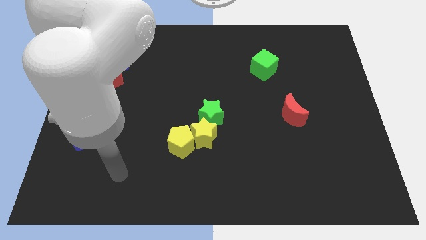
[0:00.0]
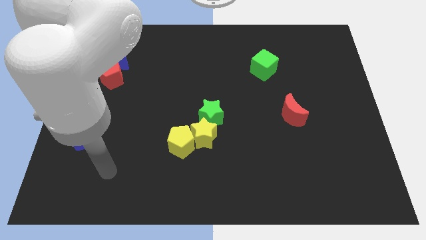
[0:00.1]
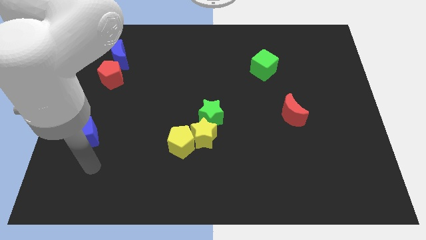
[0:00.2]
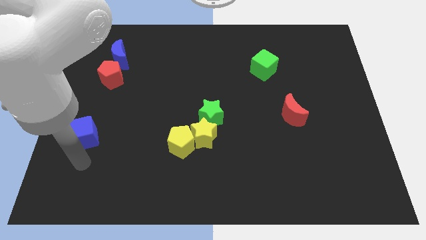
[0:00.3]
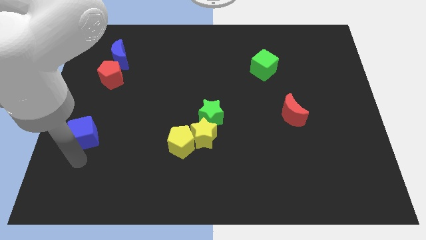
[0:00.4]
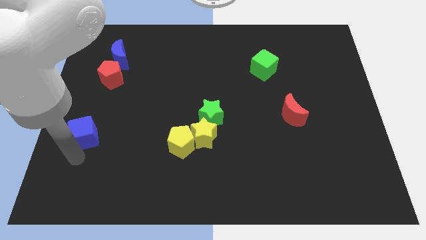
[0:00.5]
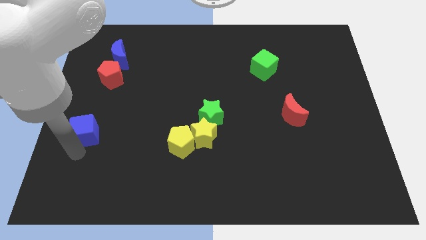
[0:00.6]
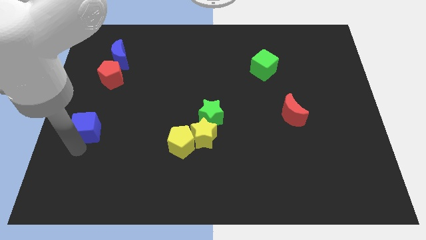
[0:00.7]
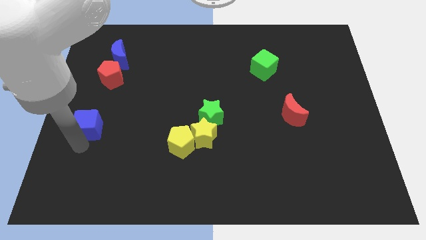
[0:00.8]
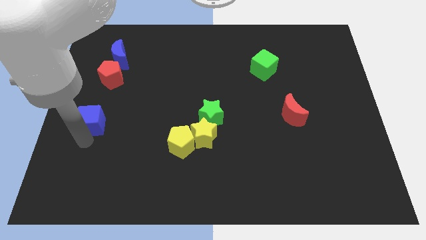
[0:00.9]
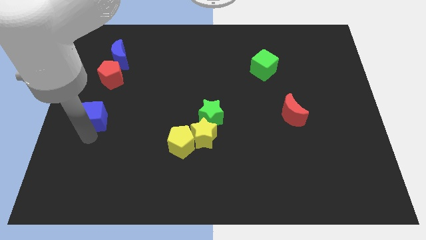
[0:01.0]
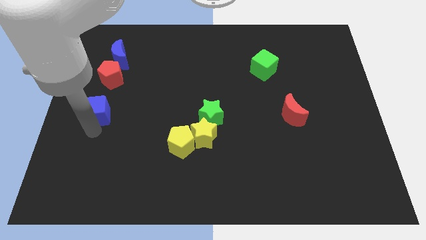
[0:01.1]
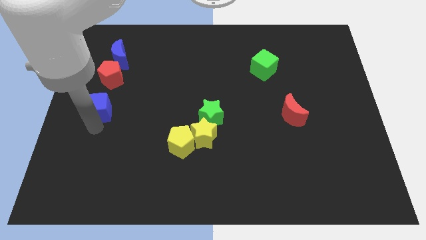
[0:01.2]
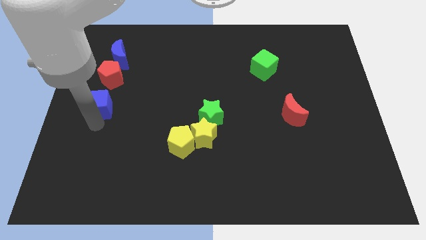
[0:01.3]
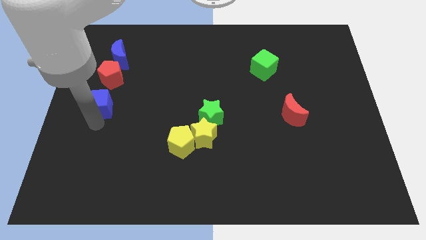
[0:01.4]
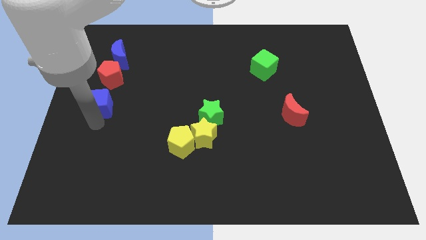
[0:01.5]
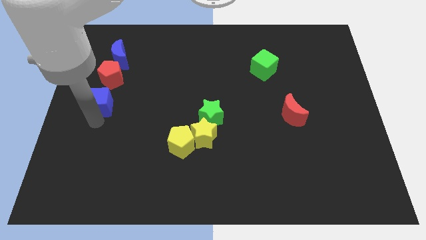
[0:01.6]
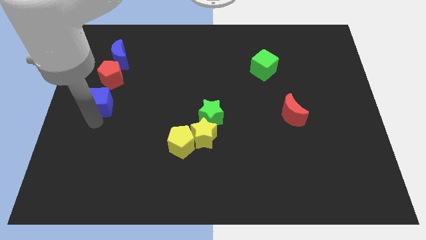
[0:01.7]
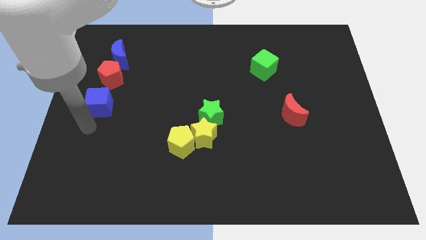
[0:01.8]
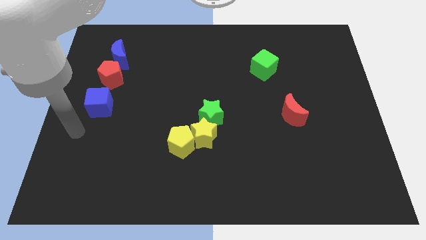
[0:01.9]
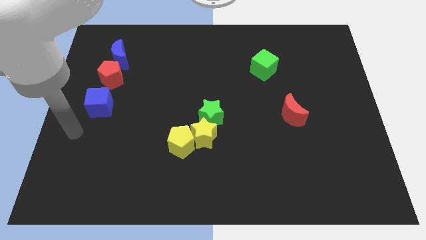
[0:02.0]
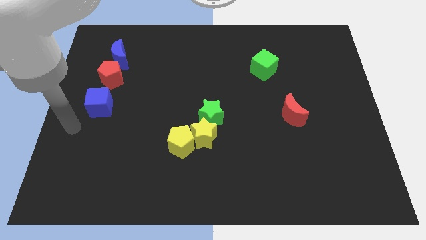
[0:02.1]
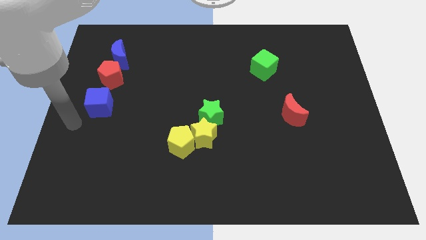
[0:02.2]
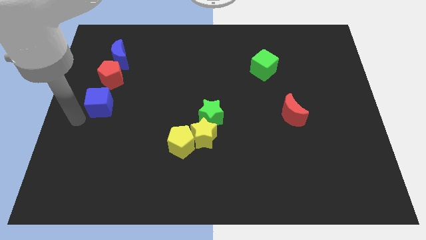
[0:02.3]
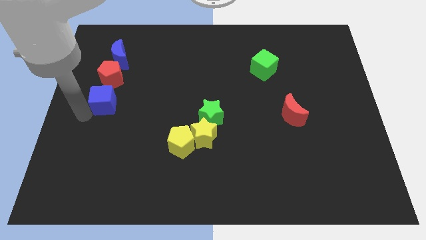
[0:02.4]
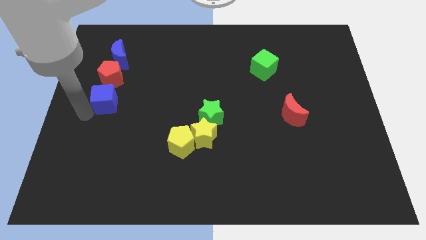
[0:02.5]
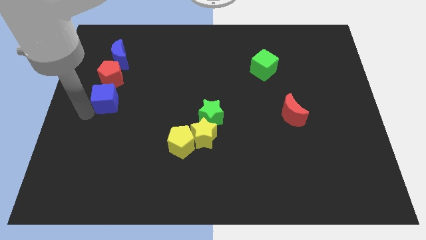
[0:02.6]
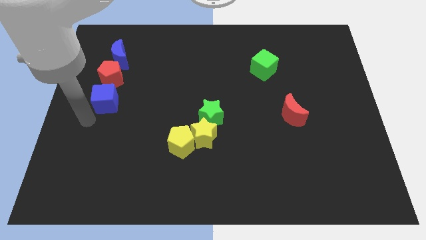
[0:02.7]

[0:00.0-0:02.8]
place blue cube below red pentagon

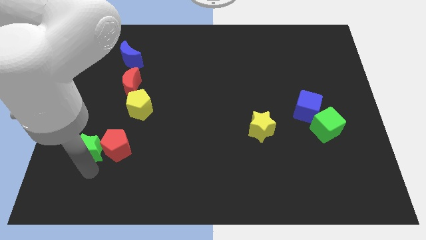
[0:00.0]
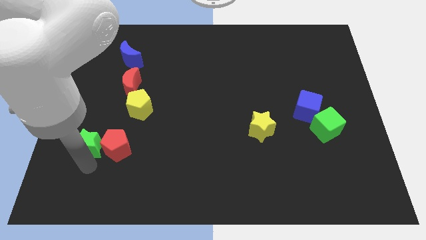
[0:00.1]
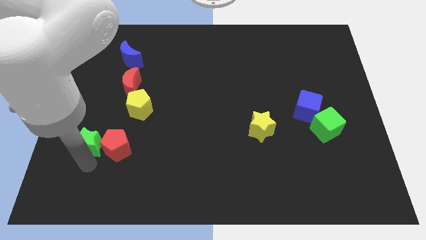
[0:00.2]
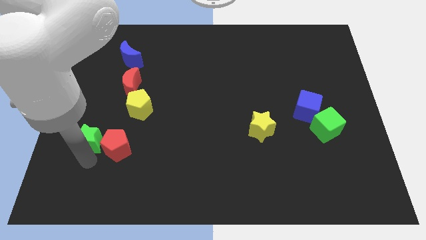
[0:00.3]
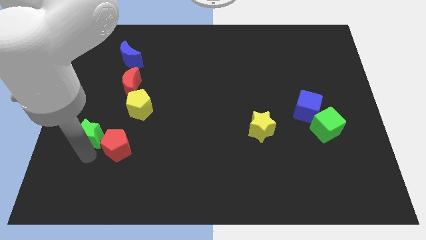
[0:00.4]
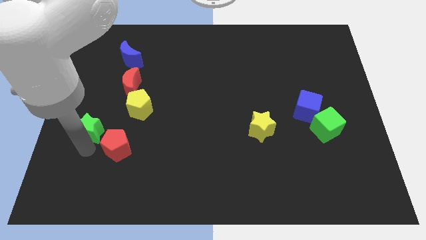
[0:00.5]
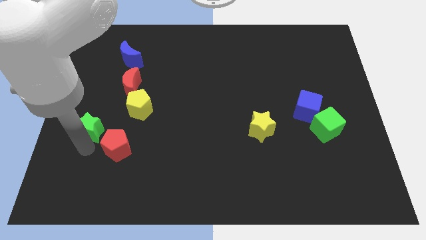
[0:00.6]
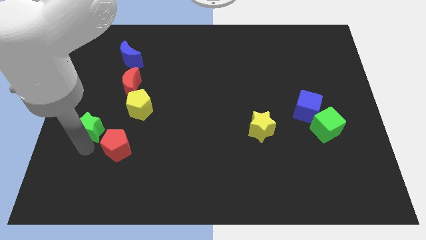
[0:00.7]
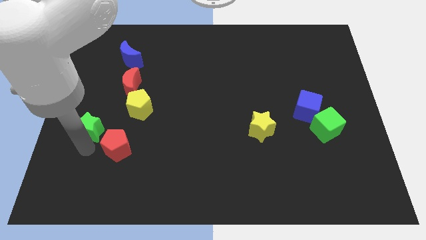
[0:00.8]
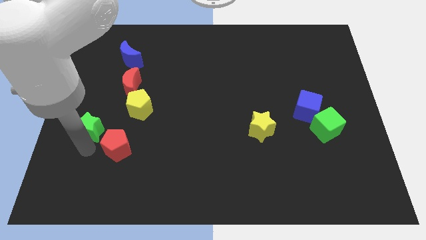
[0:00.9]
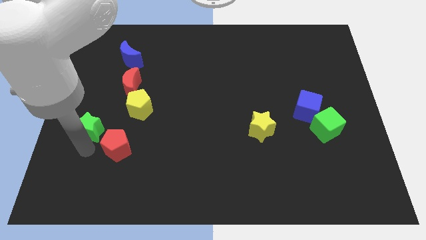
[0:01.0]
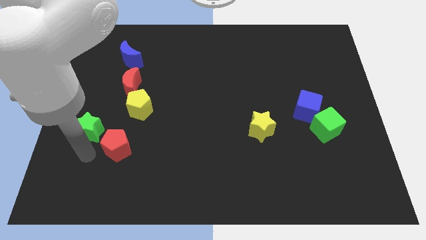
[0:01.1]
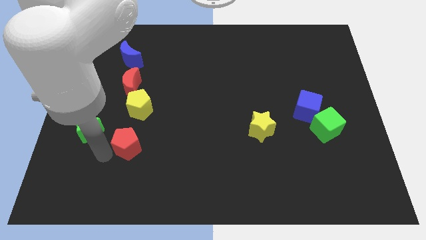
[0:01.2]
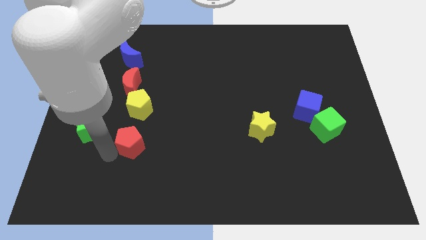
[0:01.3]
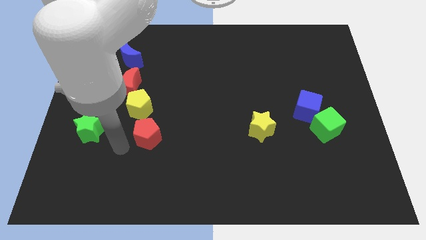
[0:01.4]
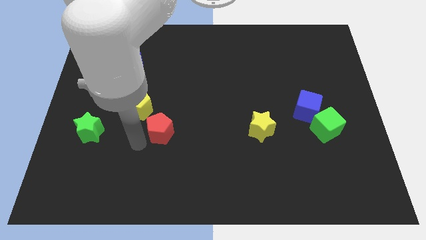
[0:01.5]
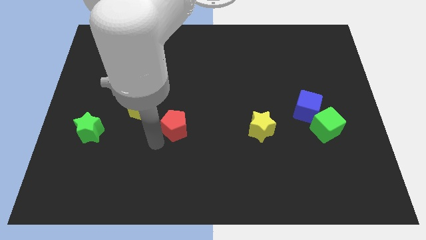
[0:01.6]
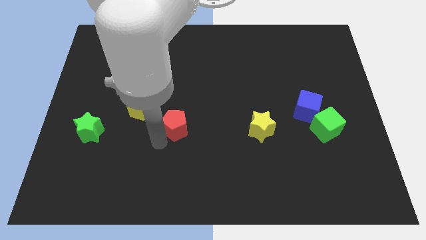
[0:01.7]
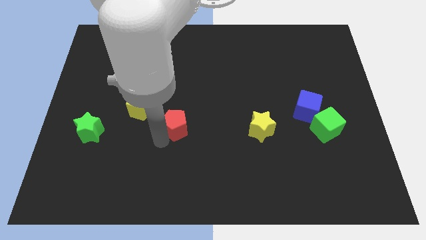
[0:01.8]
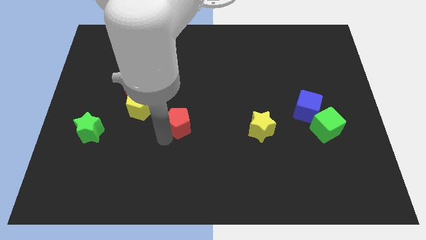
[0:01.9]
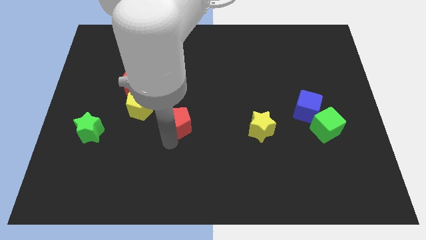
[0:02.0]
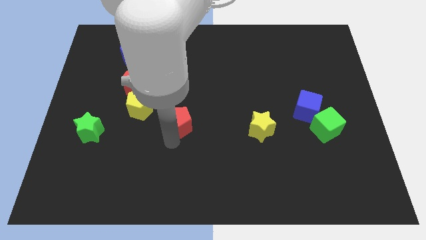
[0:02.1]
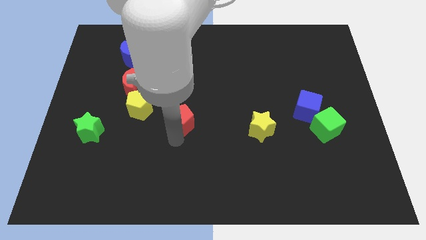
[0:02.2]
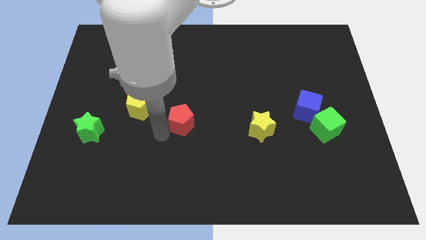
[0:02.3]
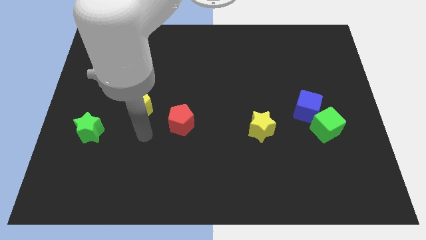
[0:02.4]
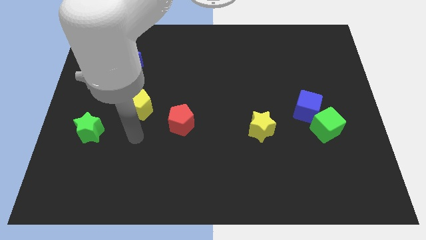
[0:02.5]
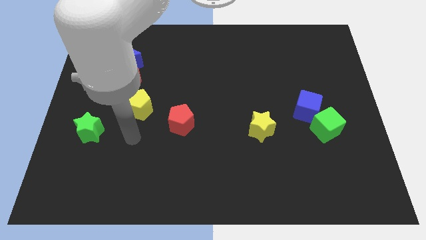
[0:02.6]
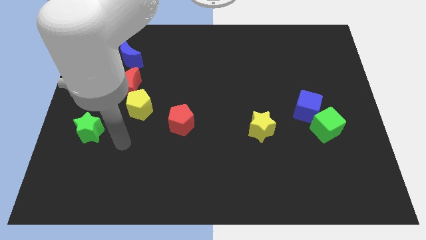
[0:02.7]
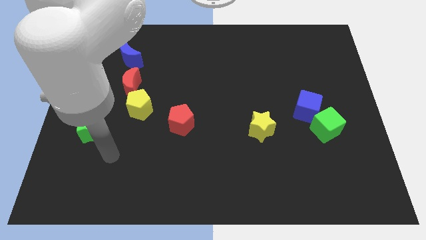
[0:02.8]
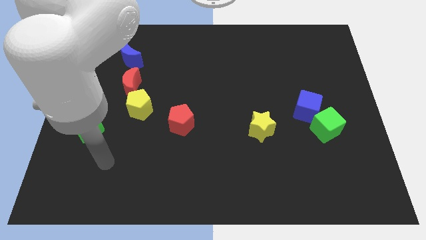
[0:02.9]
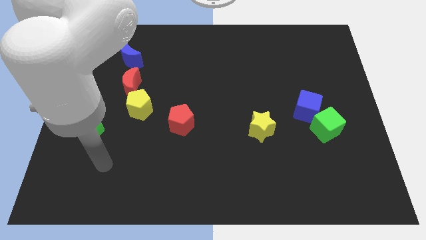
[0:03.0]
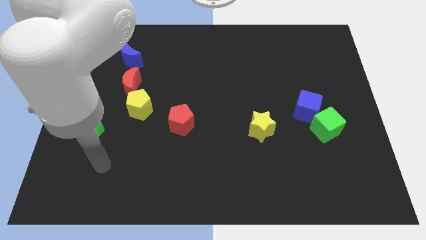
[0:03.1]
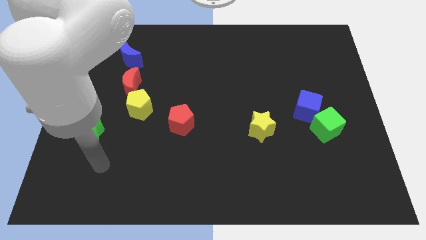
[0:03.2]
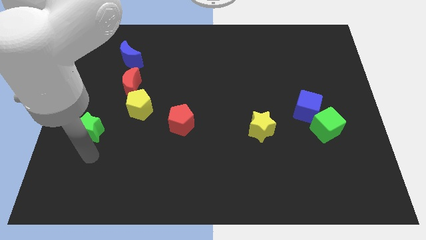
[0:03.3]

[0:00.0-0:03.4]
separate red pentagon from green star

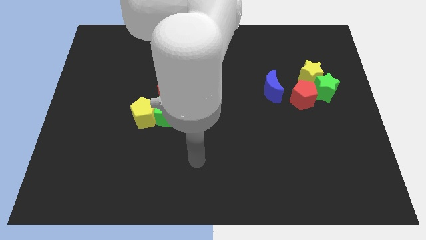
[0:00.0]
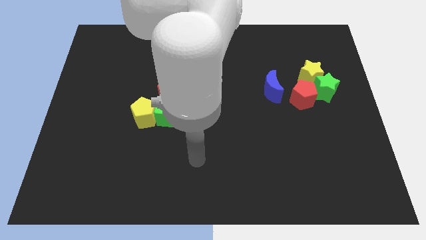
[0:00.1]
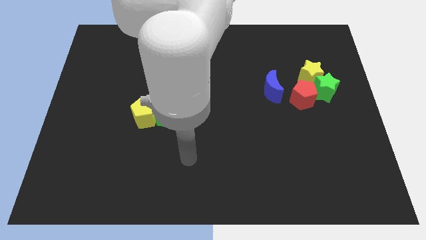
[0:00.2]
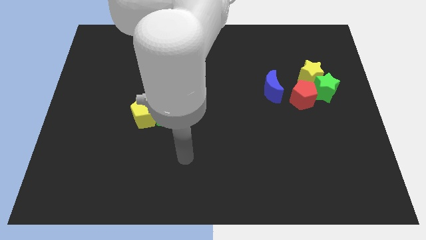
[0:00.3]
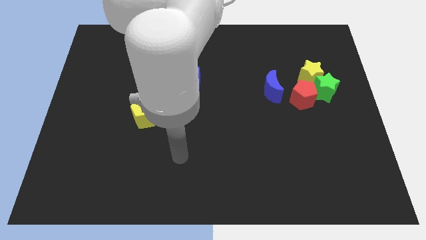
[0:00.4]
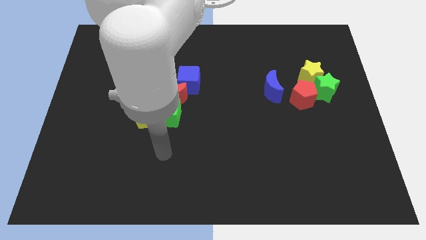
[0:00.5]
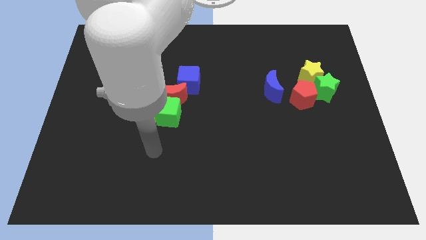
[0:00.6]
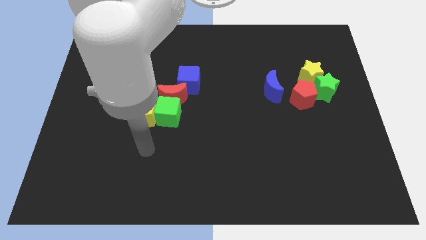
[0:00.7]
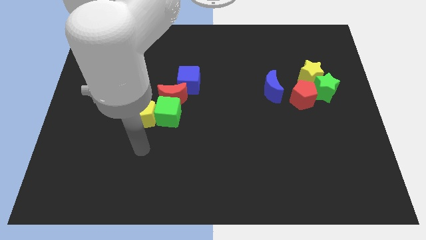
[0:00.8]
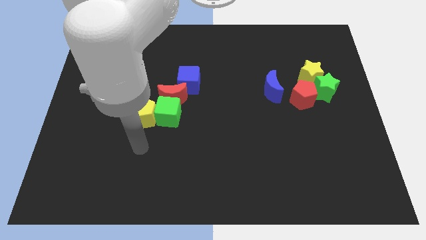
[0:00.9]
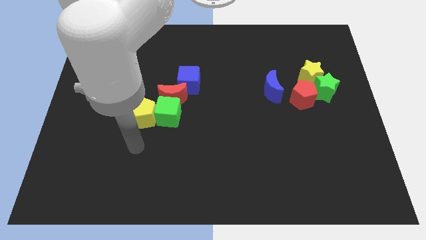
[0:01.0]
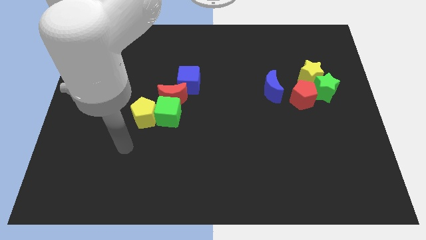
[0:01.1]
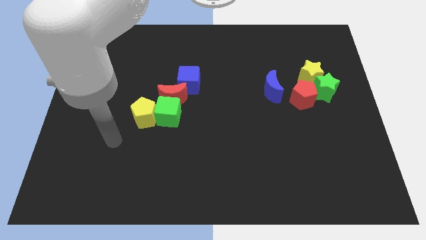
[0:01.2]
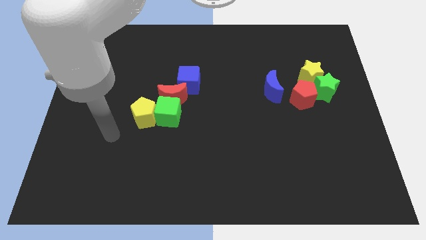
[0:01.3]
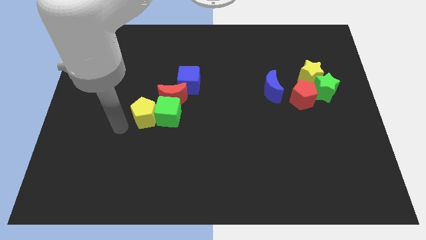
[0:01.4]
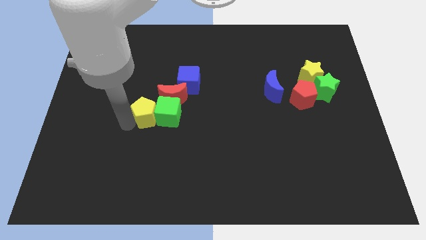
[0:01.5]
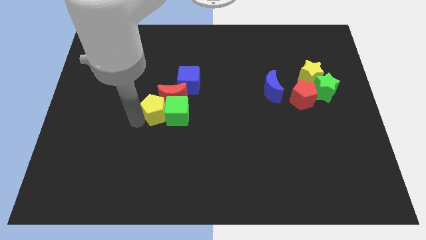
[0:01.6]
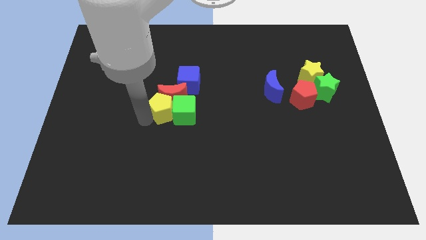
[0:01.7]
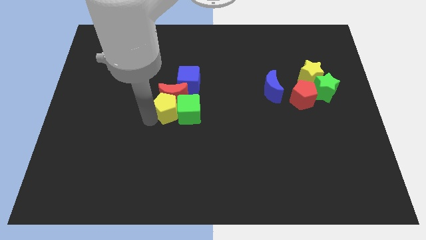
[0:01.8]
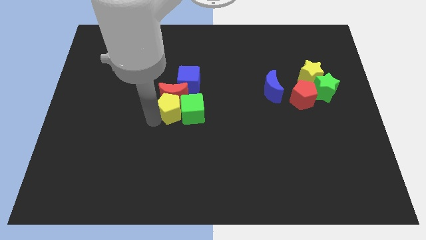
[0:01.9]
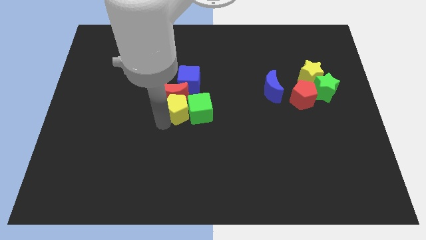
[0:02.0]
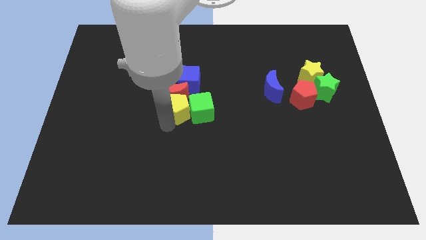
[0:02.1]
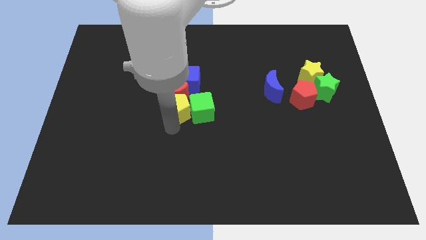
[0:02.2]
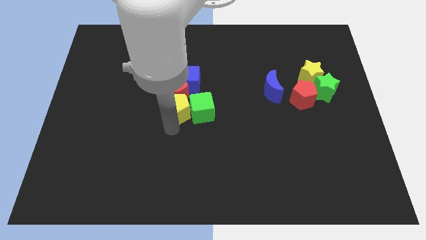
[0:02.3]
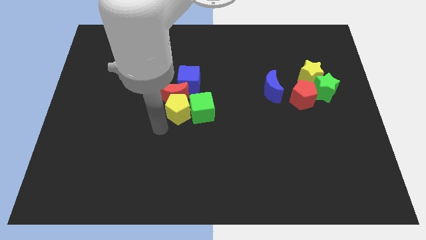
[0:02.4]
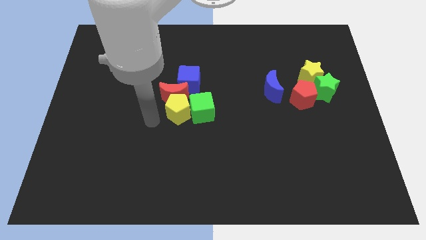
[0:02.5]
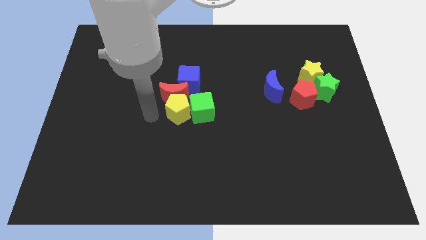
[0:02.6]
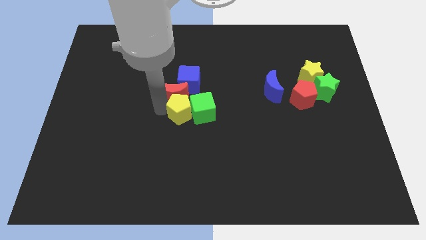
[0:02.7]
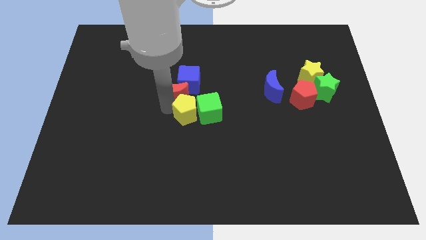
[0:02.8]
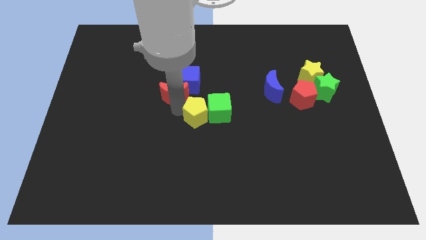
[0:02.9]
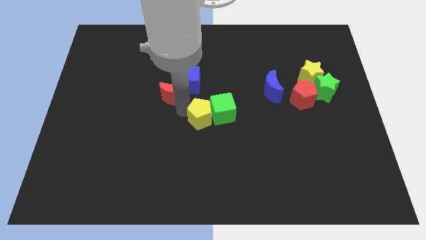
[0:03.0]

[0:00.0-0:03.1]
move your arm close to the yellow pentagon
